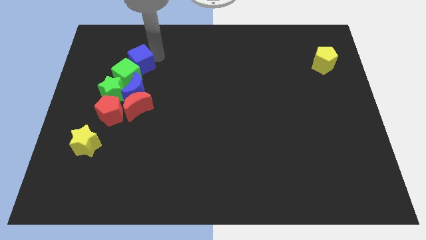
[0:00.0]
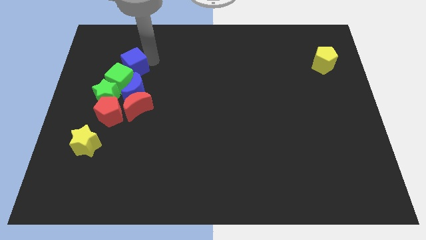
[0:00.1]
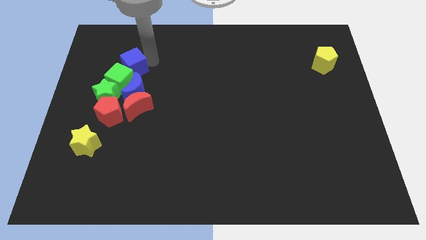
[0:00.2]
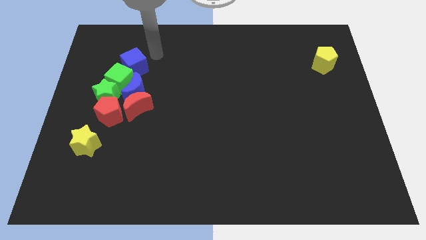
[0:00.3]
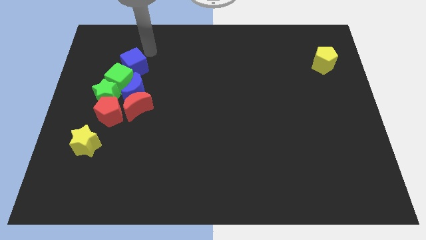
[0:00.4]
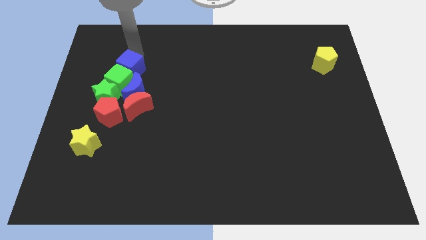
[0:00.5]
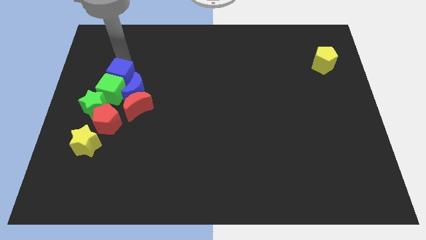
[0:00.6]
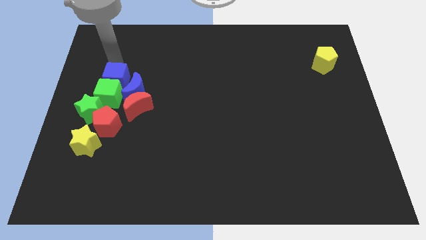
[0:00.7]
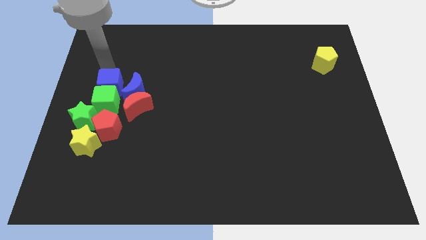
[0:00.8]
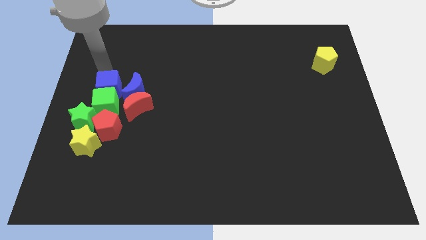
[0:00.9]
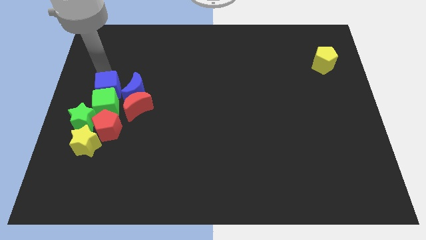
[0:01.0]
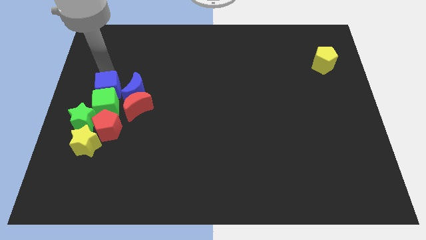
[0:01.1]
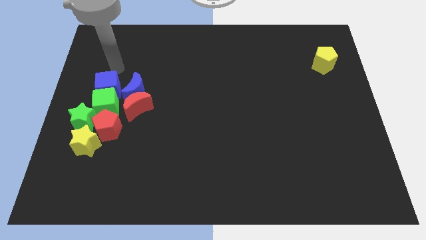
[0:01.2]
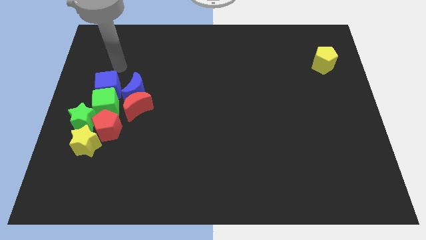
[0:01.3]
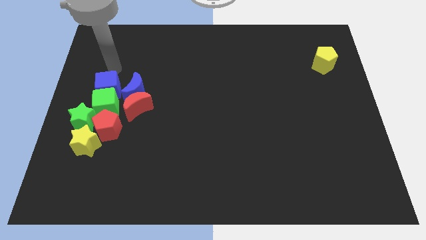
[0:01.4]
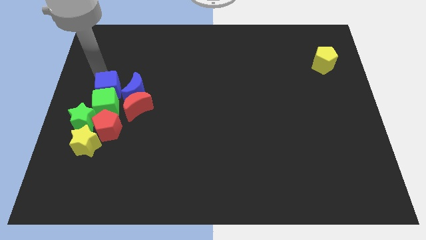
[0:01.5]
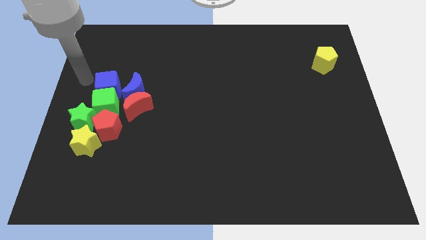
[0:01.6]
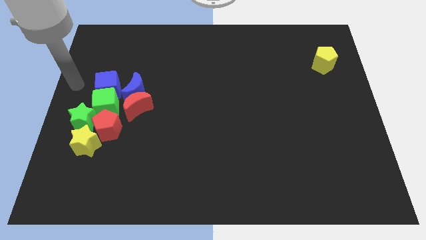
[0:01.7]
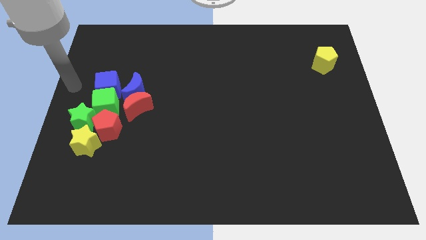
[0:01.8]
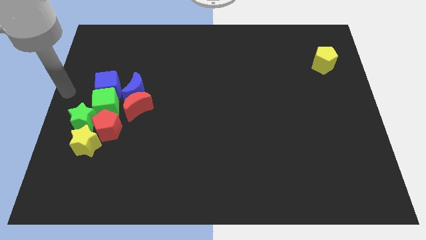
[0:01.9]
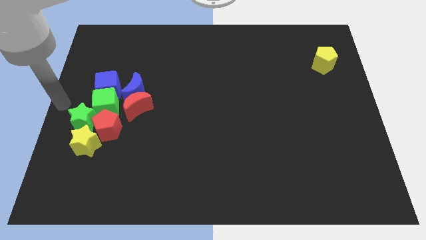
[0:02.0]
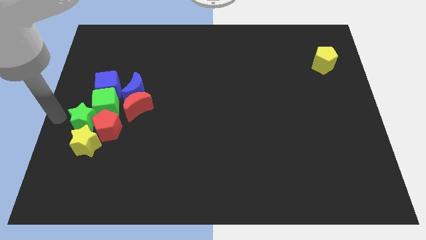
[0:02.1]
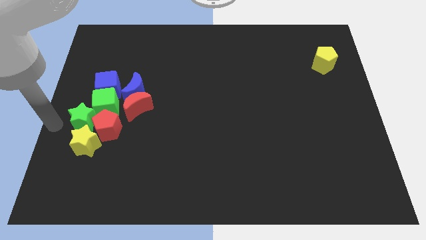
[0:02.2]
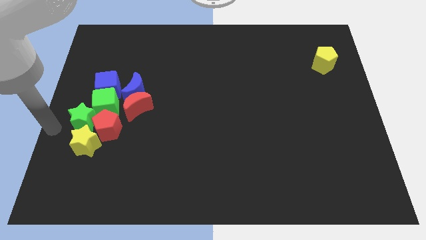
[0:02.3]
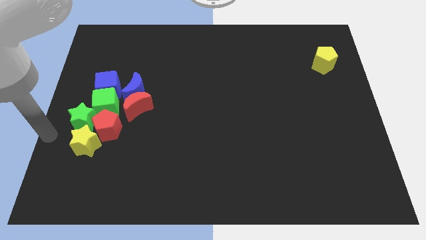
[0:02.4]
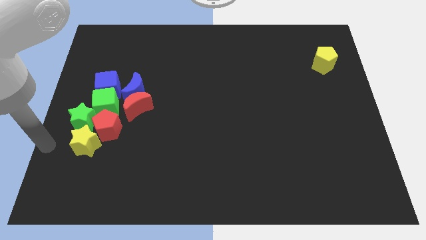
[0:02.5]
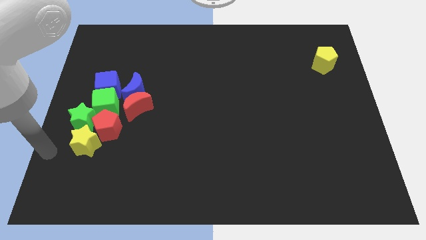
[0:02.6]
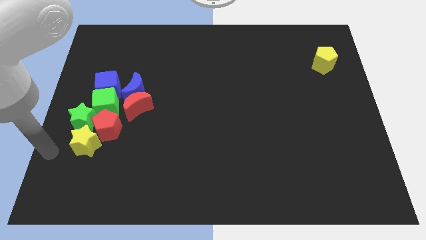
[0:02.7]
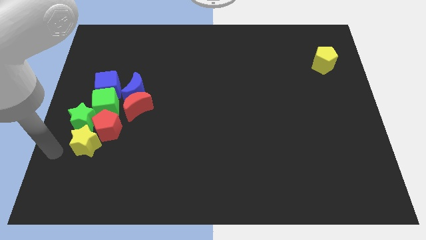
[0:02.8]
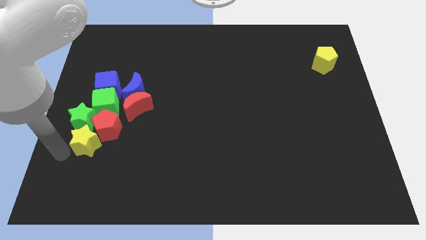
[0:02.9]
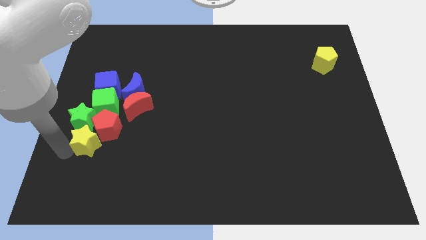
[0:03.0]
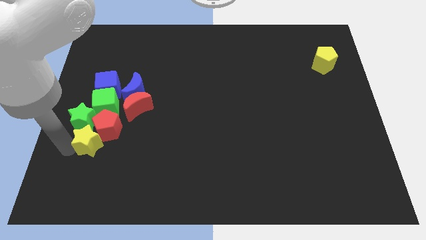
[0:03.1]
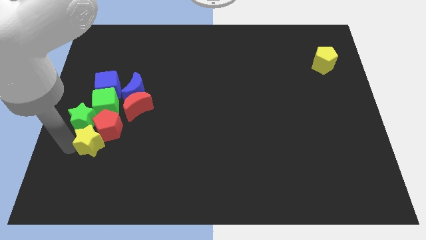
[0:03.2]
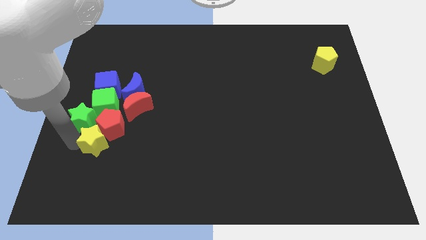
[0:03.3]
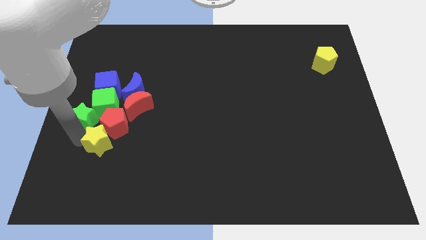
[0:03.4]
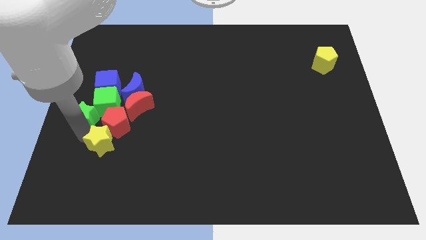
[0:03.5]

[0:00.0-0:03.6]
adjust the group of blocks at the left side of the table

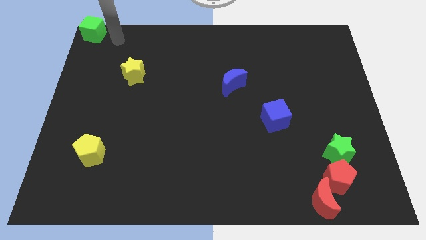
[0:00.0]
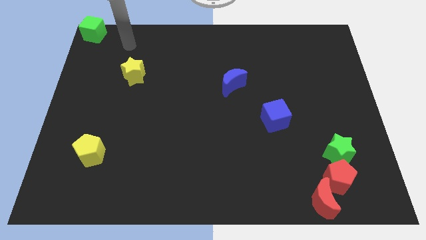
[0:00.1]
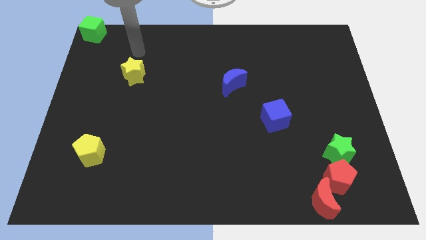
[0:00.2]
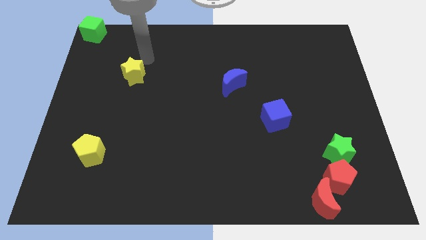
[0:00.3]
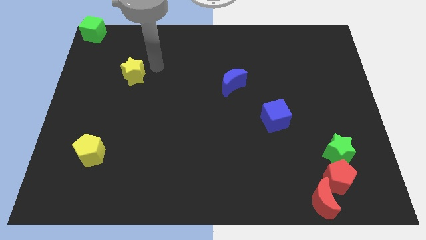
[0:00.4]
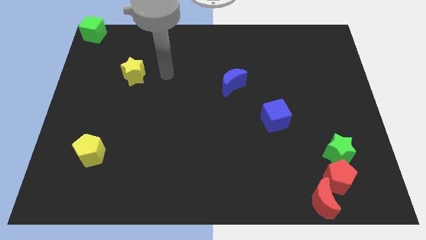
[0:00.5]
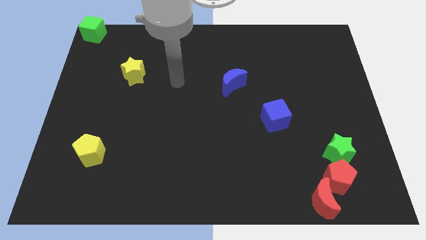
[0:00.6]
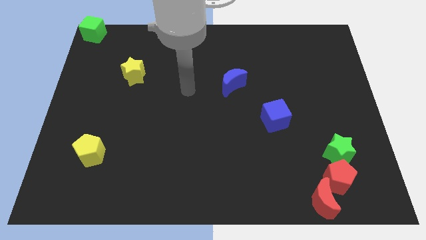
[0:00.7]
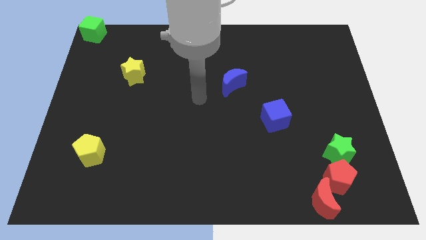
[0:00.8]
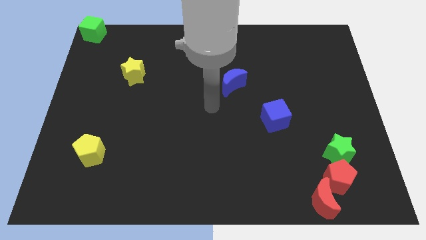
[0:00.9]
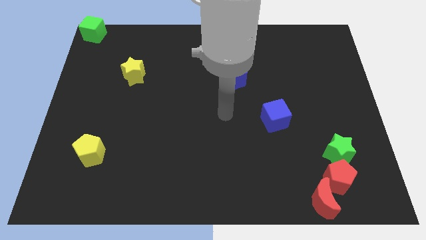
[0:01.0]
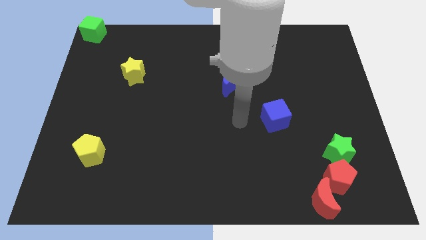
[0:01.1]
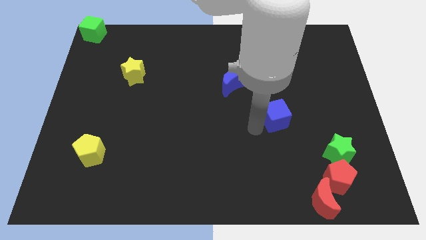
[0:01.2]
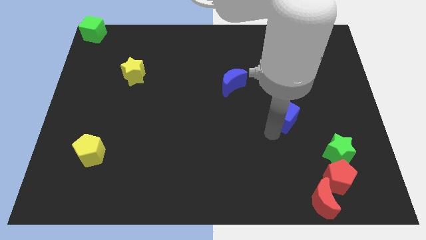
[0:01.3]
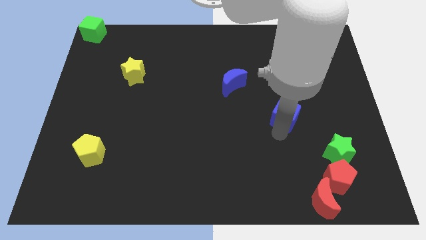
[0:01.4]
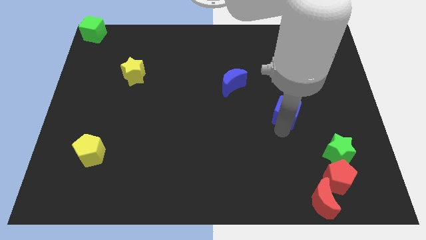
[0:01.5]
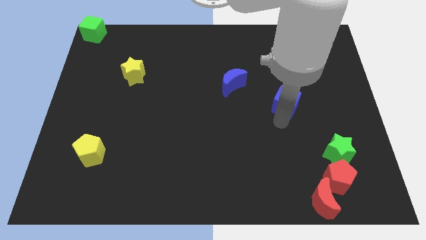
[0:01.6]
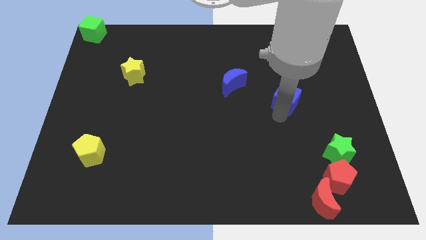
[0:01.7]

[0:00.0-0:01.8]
tap the bottom side of the blue cube

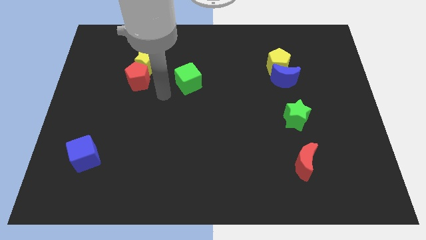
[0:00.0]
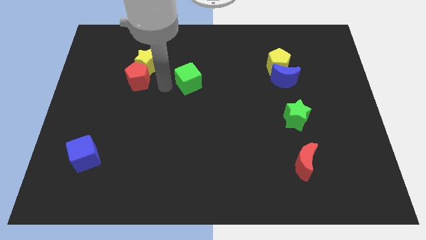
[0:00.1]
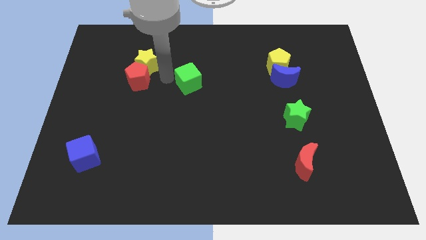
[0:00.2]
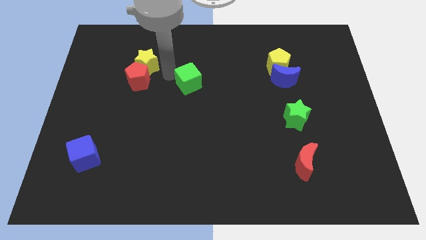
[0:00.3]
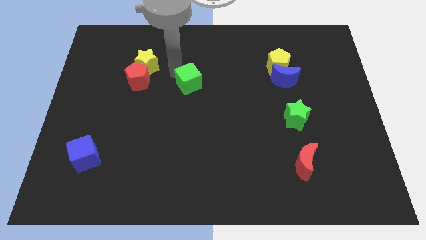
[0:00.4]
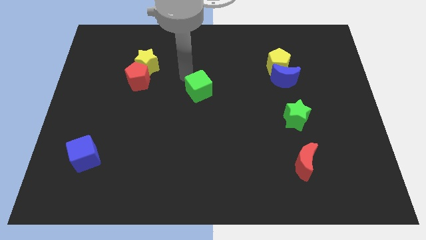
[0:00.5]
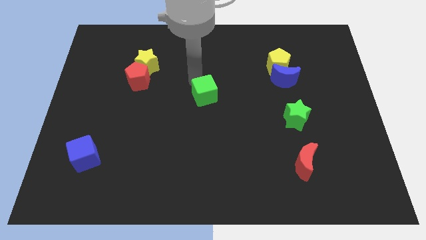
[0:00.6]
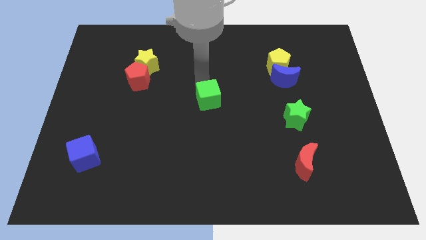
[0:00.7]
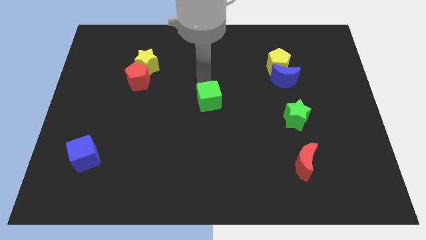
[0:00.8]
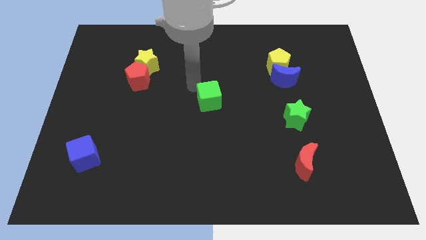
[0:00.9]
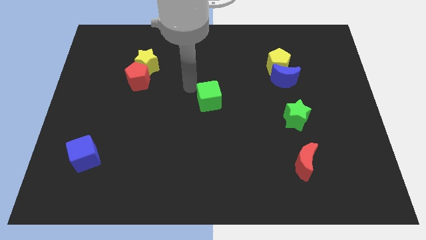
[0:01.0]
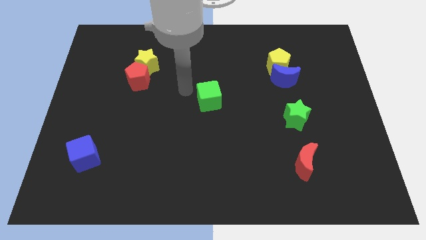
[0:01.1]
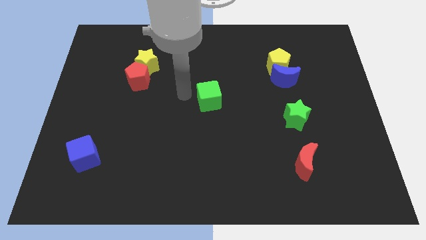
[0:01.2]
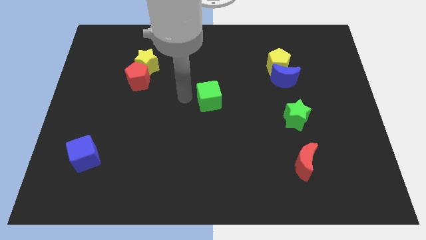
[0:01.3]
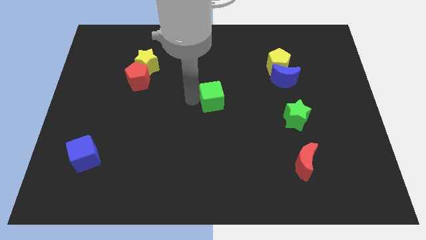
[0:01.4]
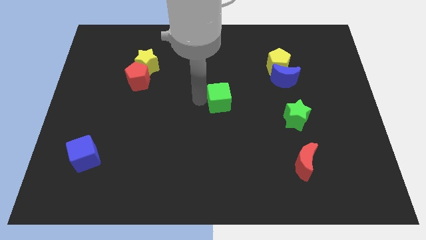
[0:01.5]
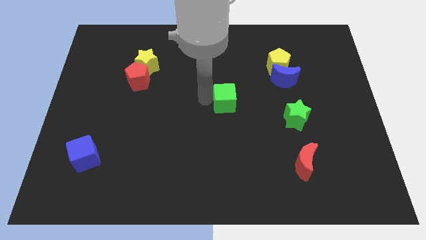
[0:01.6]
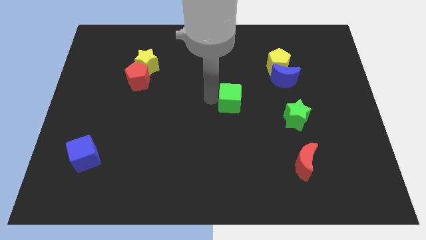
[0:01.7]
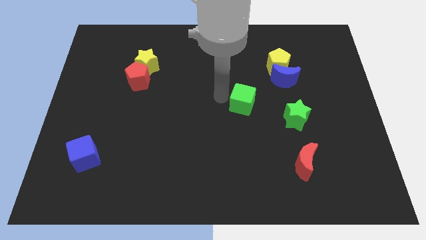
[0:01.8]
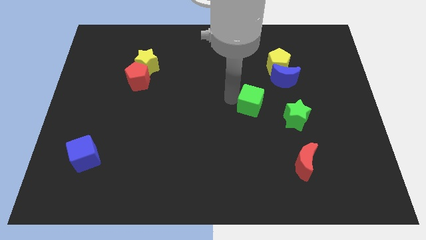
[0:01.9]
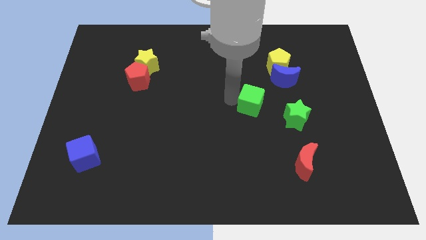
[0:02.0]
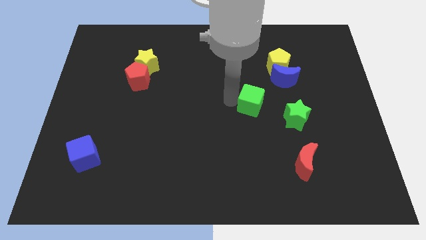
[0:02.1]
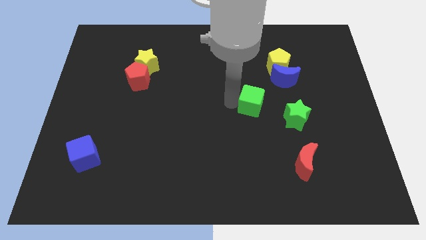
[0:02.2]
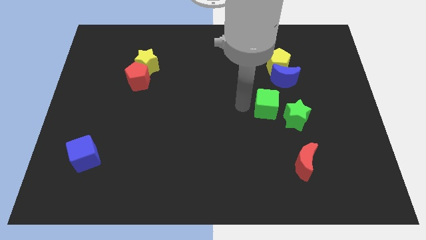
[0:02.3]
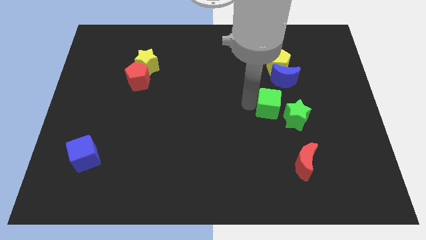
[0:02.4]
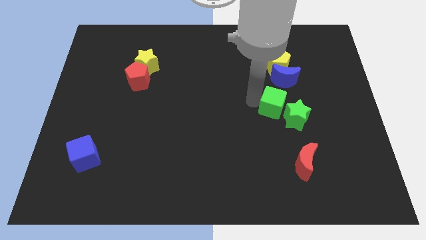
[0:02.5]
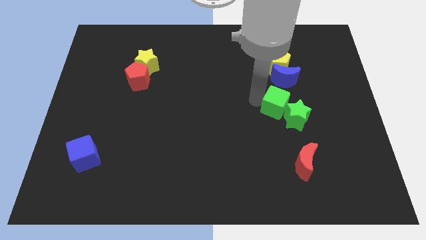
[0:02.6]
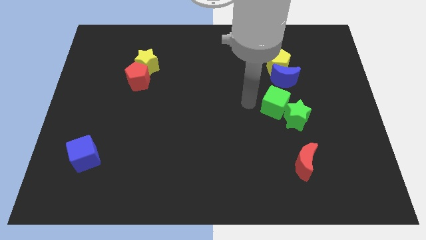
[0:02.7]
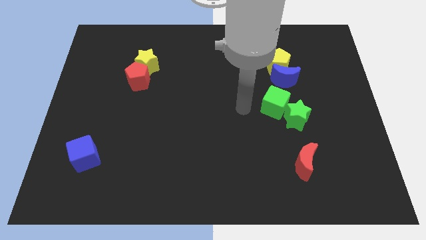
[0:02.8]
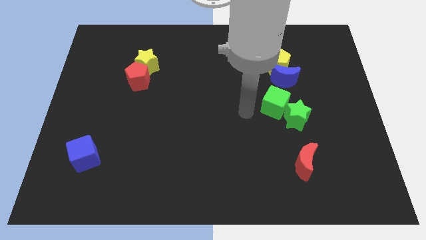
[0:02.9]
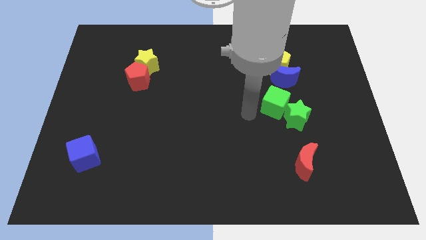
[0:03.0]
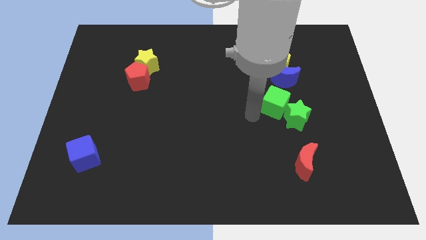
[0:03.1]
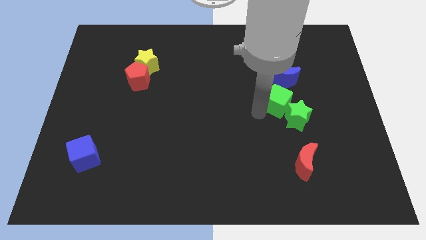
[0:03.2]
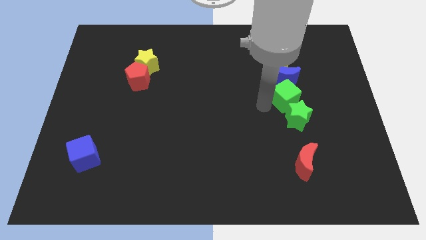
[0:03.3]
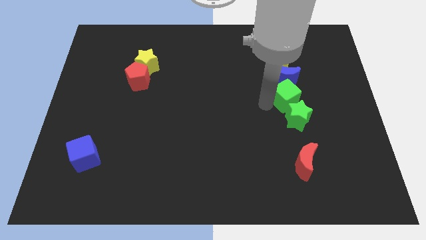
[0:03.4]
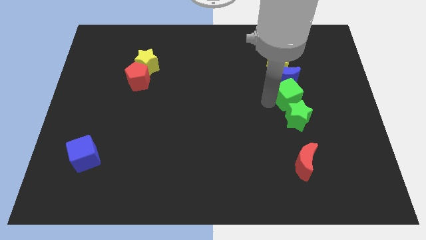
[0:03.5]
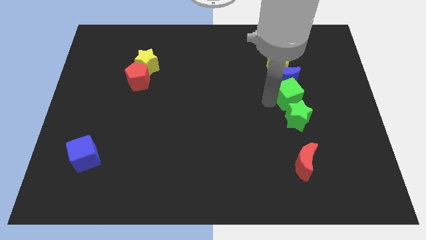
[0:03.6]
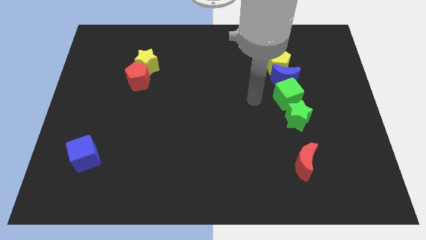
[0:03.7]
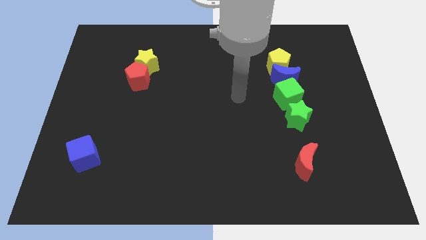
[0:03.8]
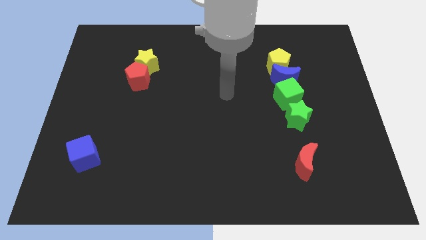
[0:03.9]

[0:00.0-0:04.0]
place the green cube above the green star
